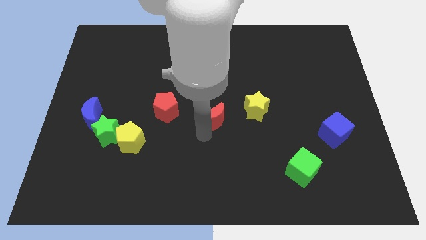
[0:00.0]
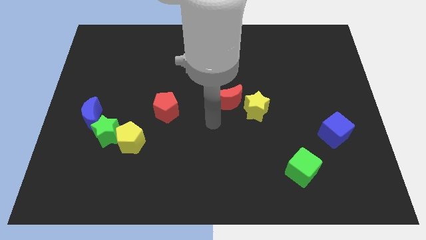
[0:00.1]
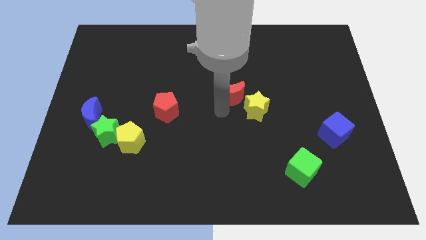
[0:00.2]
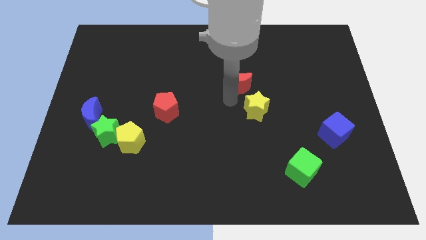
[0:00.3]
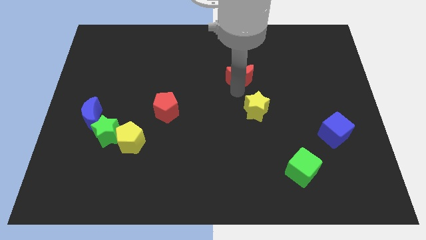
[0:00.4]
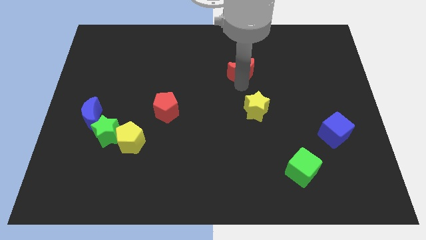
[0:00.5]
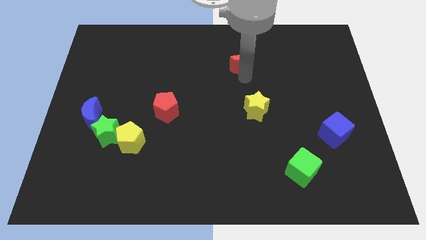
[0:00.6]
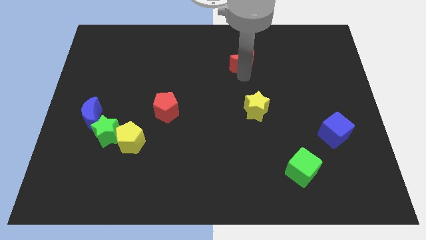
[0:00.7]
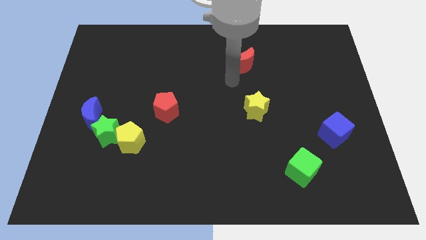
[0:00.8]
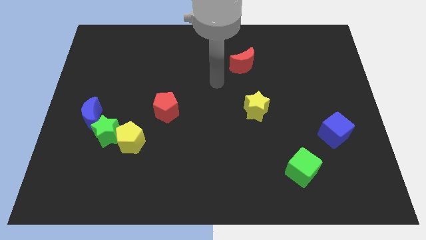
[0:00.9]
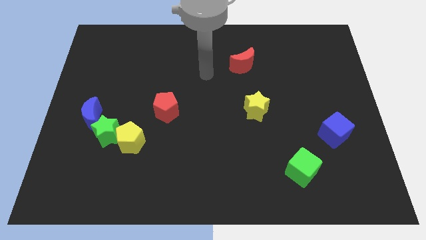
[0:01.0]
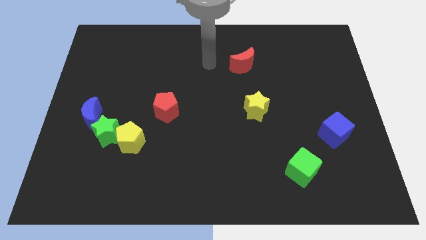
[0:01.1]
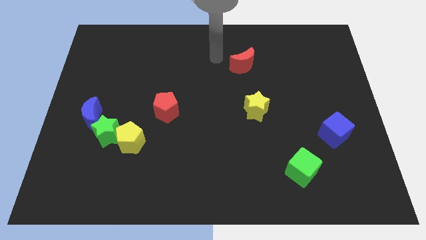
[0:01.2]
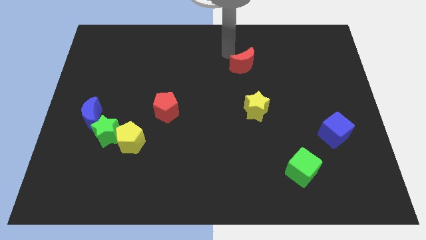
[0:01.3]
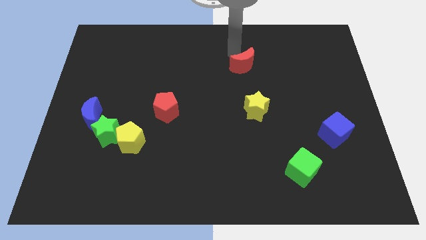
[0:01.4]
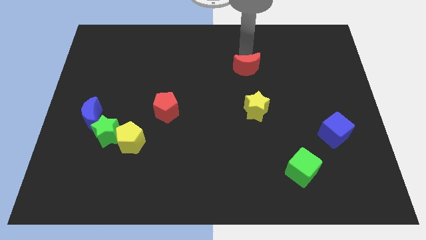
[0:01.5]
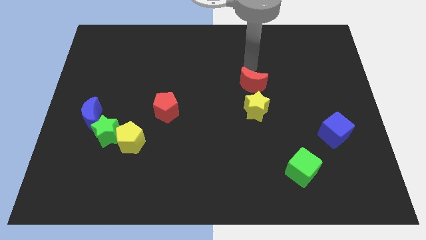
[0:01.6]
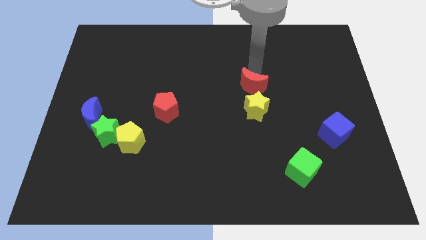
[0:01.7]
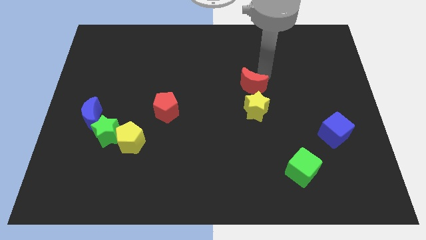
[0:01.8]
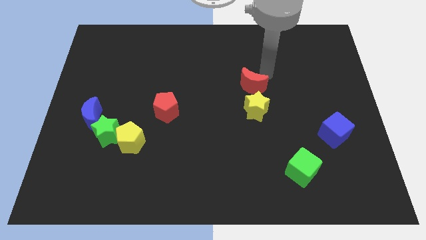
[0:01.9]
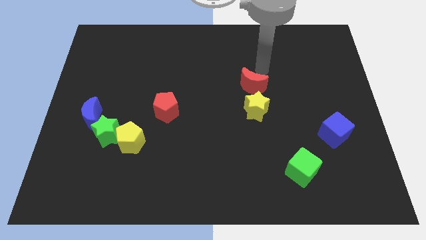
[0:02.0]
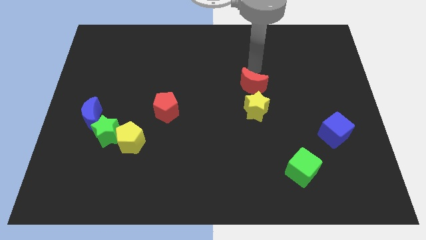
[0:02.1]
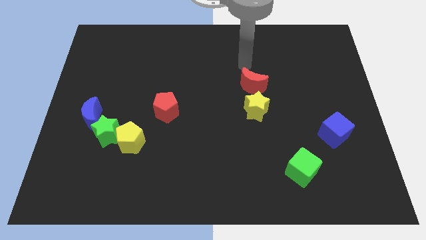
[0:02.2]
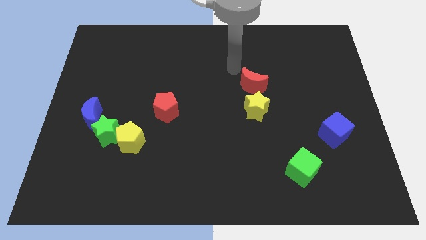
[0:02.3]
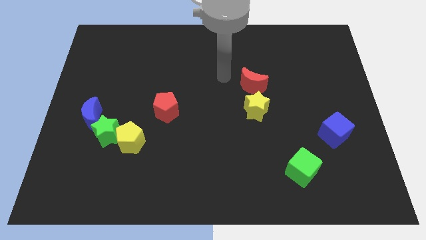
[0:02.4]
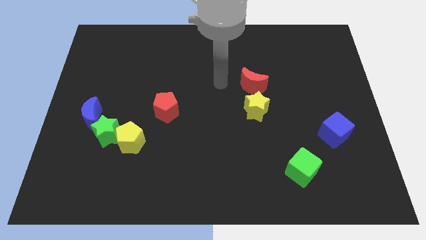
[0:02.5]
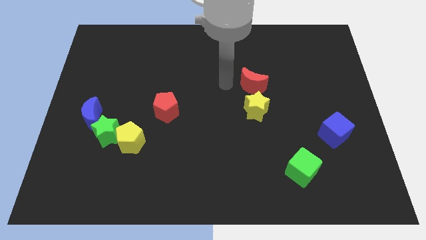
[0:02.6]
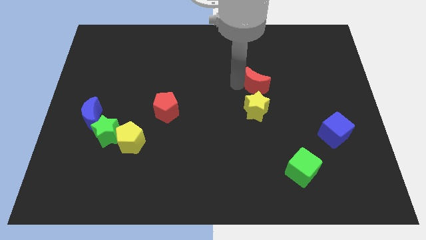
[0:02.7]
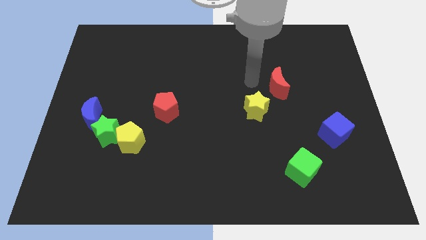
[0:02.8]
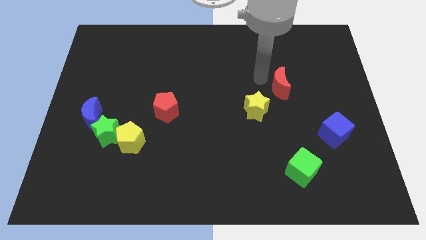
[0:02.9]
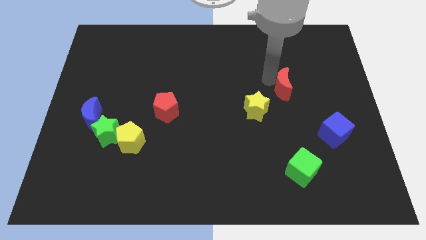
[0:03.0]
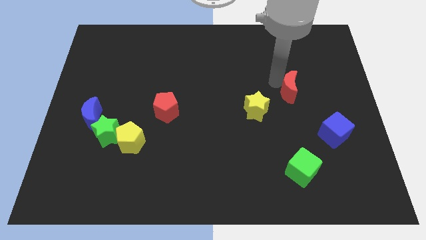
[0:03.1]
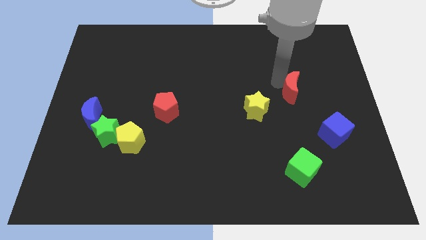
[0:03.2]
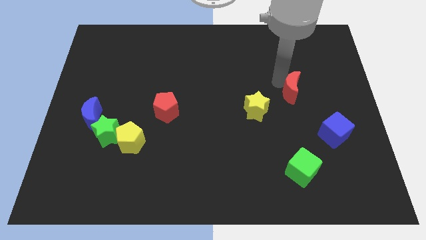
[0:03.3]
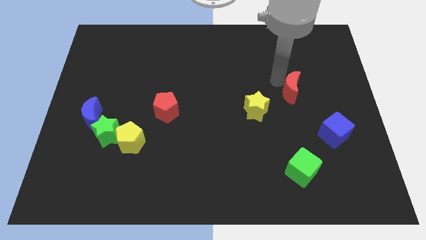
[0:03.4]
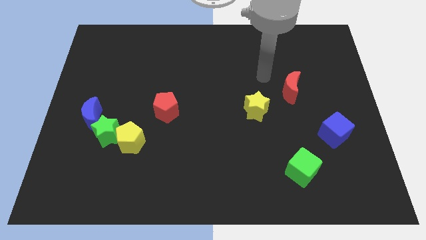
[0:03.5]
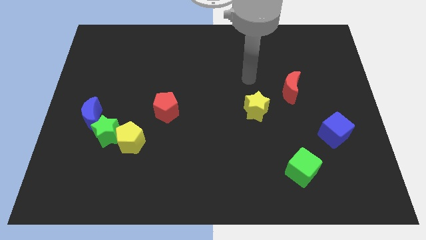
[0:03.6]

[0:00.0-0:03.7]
move the red crescent diagonal right of yellow star

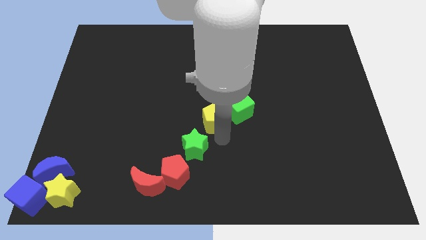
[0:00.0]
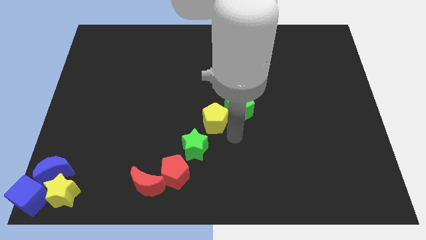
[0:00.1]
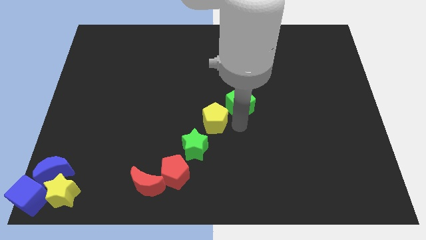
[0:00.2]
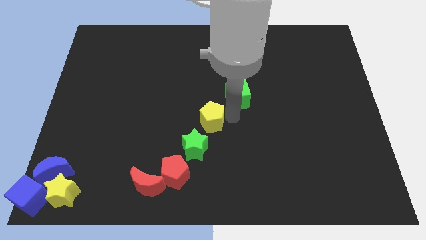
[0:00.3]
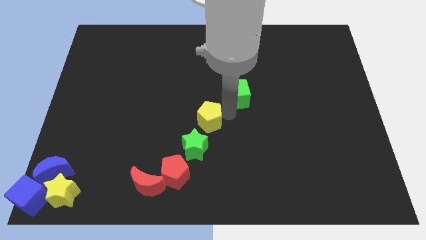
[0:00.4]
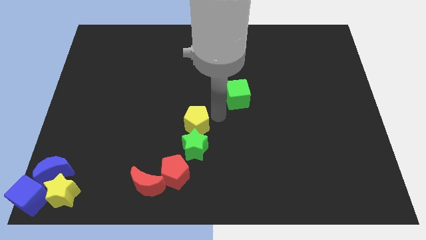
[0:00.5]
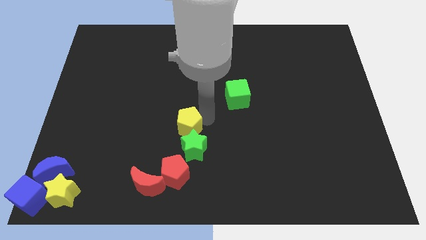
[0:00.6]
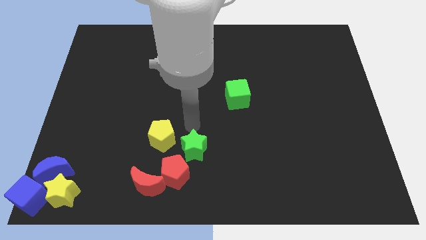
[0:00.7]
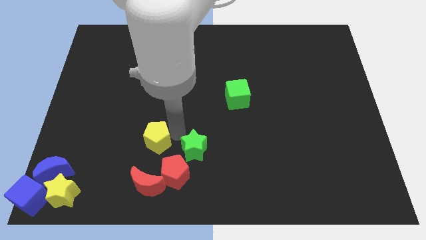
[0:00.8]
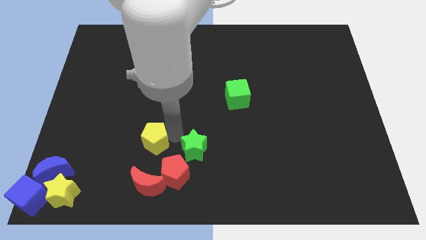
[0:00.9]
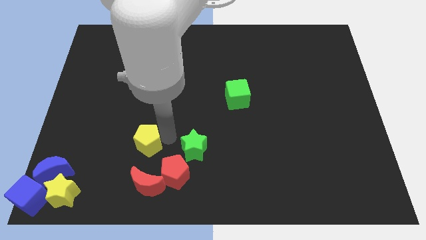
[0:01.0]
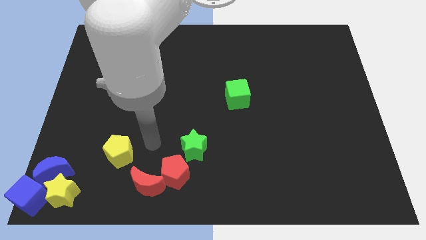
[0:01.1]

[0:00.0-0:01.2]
separate yellow pentagon from the green cube

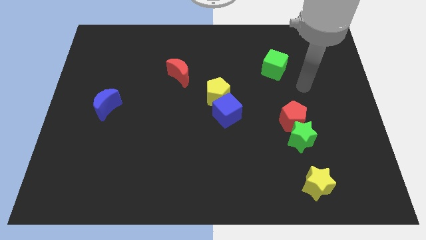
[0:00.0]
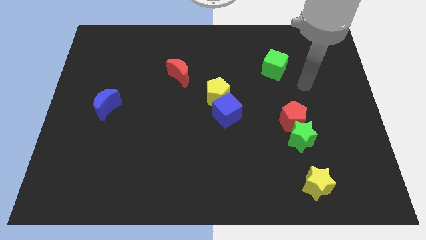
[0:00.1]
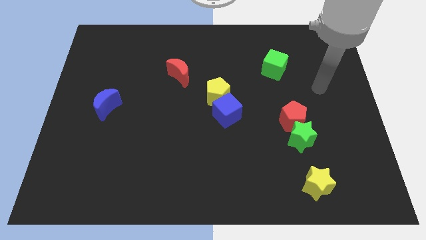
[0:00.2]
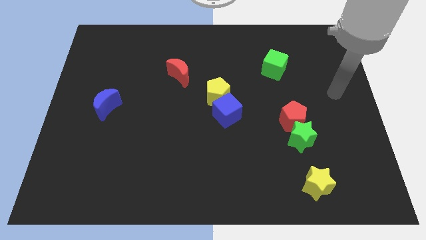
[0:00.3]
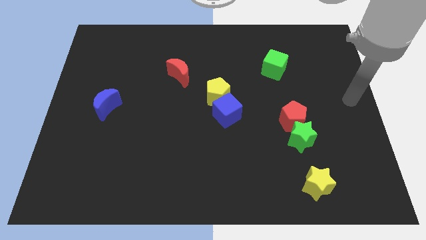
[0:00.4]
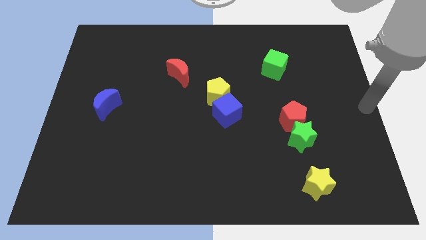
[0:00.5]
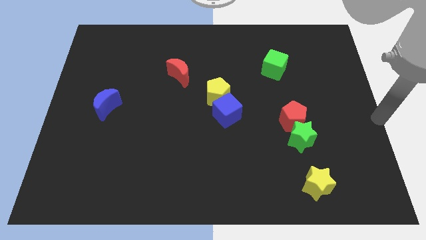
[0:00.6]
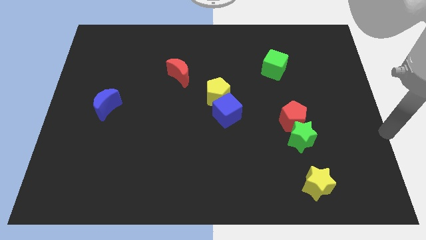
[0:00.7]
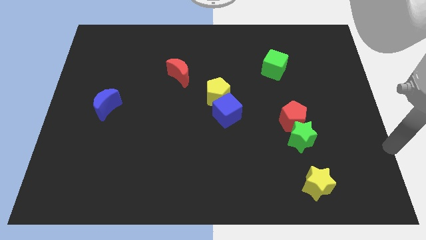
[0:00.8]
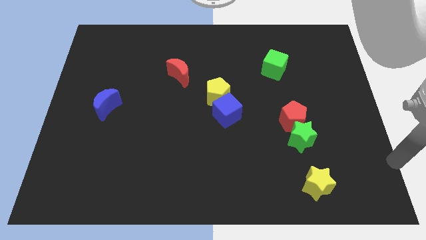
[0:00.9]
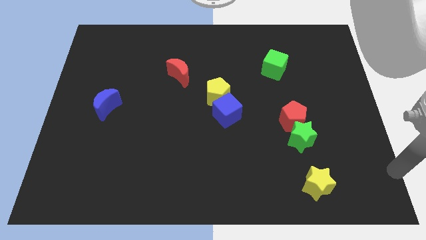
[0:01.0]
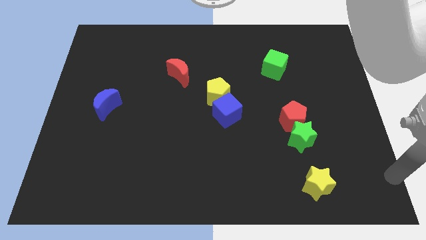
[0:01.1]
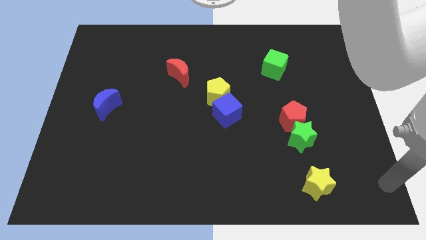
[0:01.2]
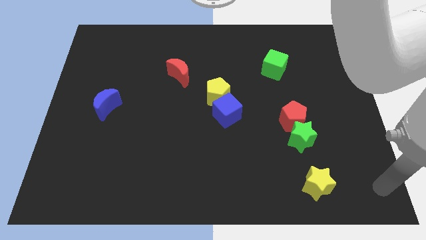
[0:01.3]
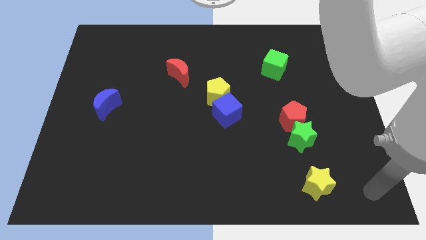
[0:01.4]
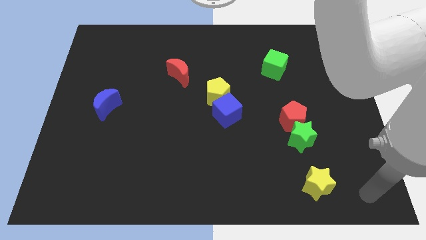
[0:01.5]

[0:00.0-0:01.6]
place your arm to the right of the yellow star

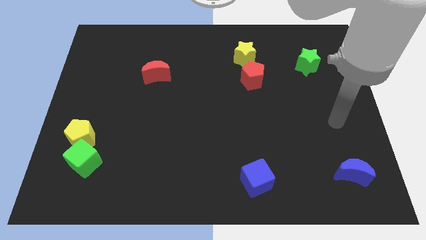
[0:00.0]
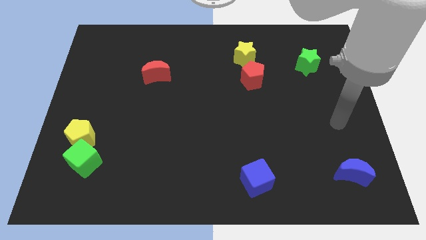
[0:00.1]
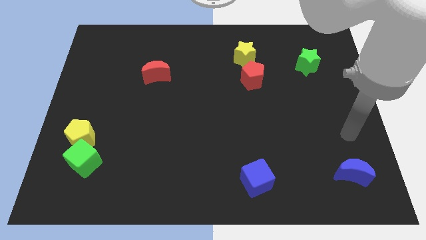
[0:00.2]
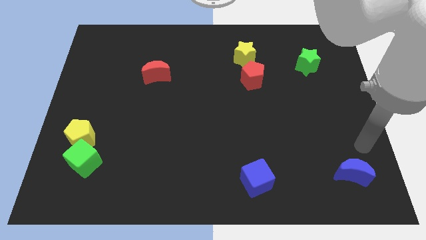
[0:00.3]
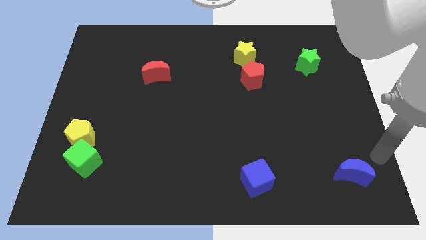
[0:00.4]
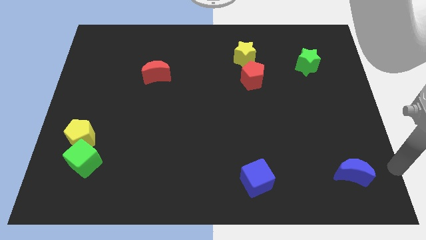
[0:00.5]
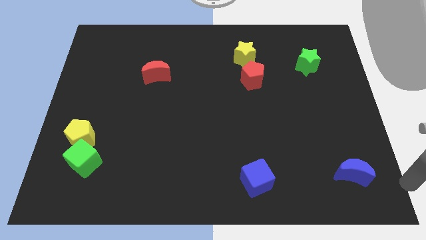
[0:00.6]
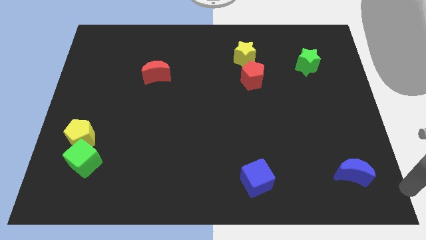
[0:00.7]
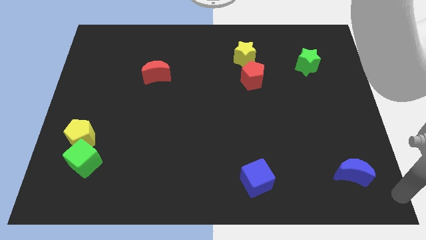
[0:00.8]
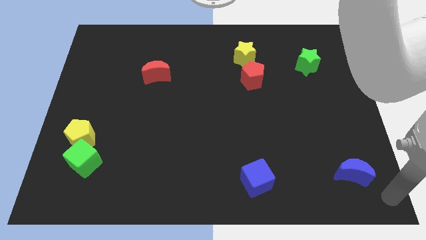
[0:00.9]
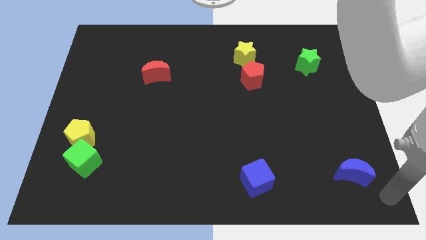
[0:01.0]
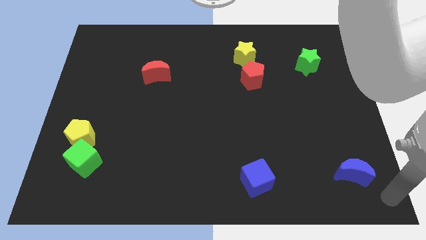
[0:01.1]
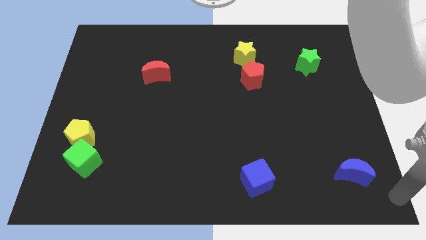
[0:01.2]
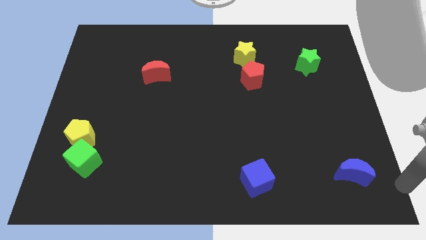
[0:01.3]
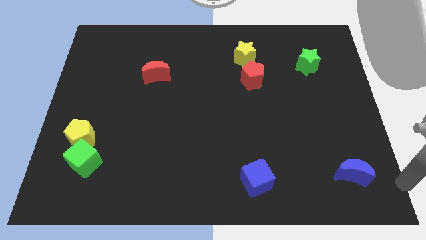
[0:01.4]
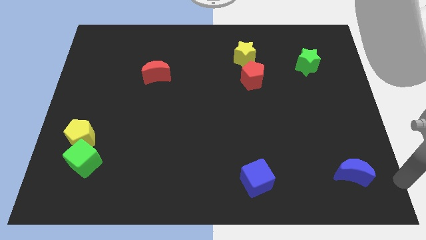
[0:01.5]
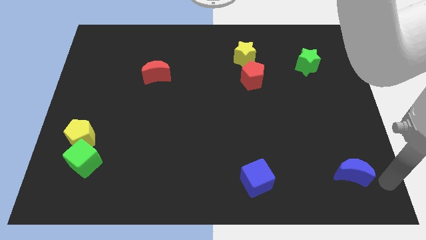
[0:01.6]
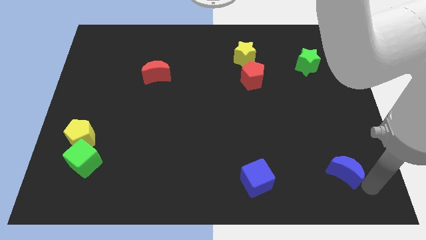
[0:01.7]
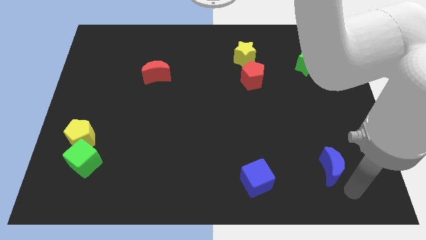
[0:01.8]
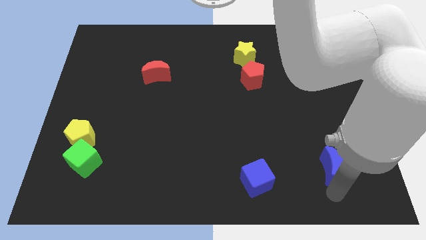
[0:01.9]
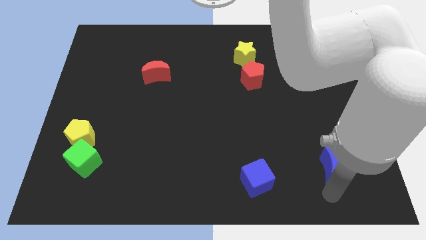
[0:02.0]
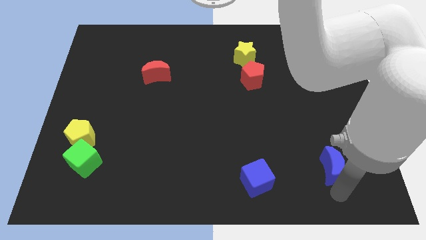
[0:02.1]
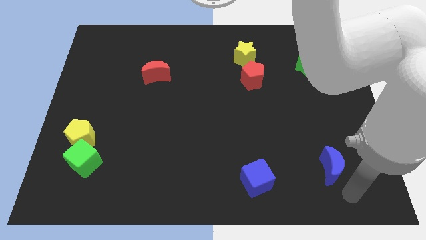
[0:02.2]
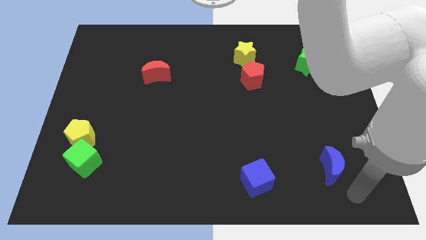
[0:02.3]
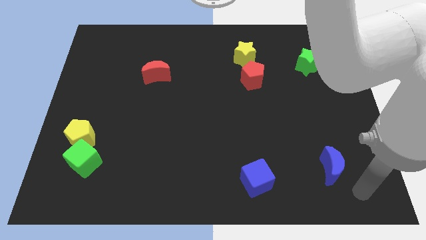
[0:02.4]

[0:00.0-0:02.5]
push the blue crescent slightly towards the left side of the board
